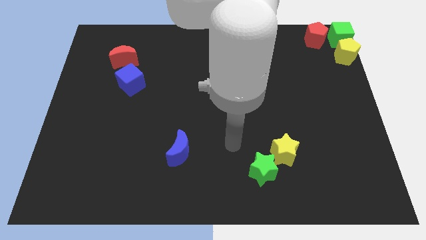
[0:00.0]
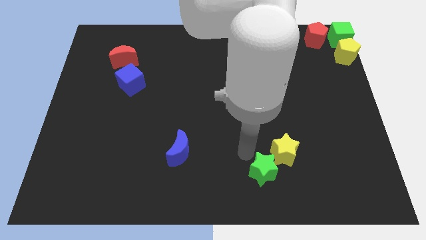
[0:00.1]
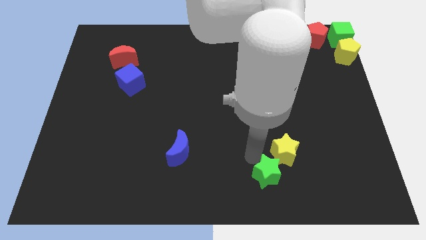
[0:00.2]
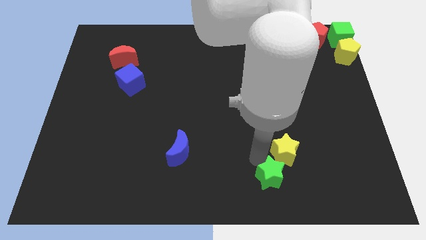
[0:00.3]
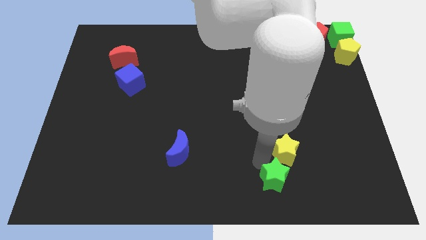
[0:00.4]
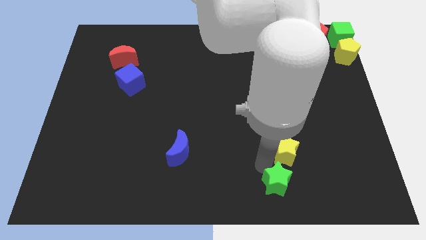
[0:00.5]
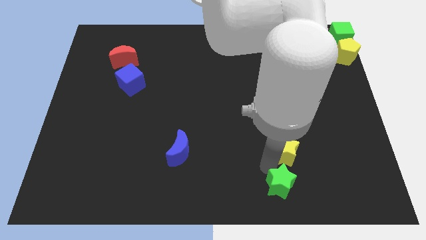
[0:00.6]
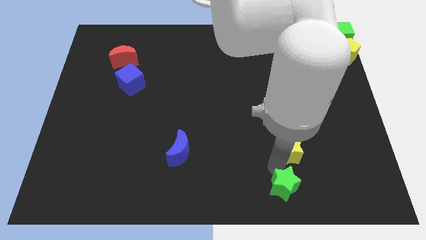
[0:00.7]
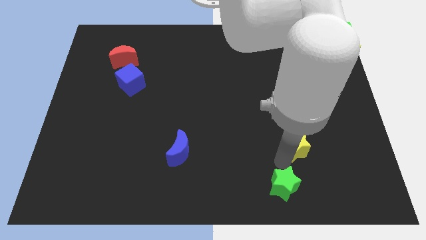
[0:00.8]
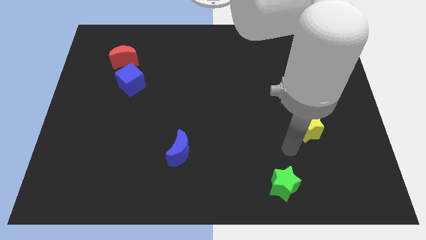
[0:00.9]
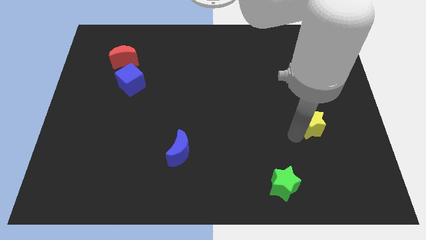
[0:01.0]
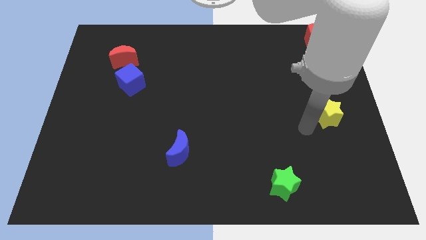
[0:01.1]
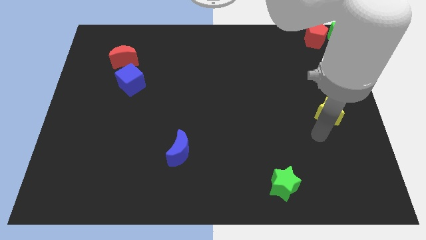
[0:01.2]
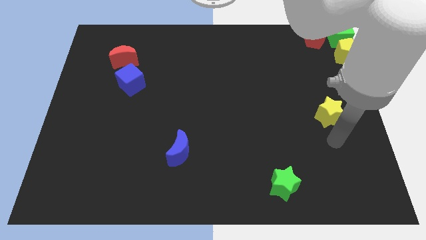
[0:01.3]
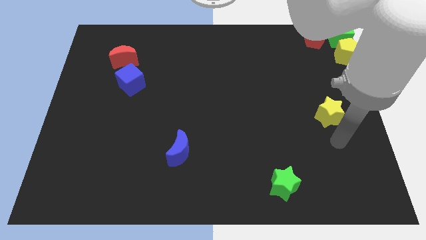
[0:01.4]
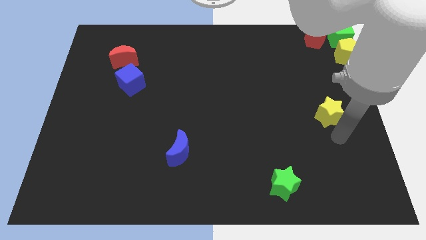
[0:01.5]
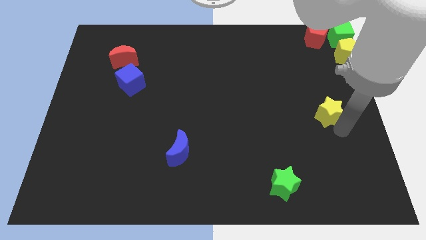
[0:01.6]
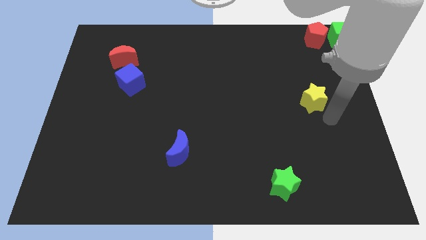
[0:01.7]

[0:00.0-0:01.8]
separate the yellow star from the green star

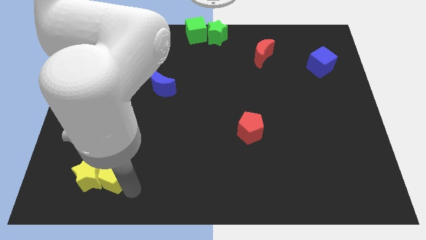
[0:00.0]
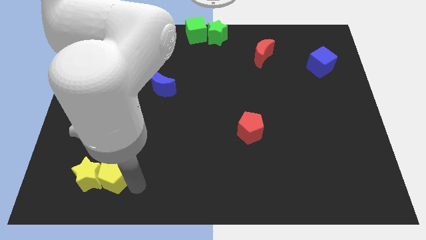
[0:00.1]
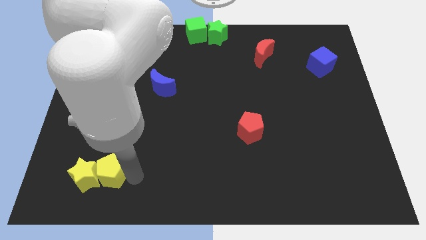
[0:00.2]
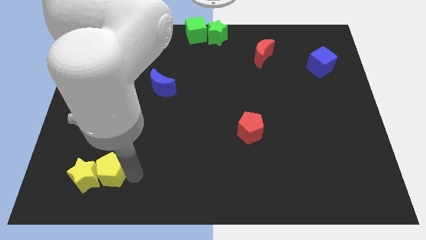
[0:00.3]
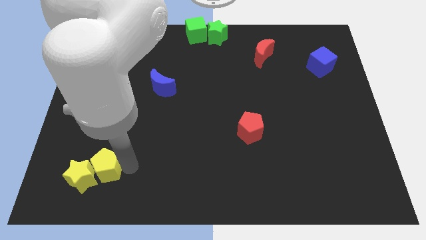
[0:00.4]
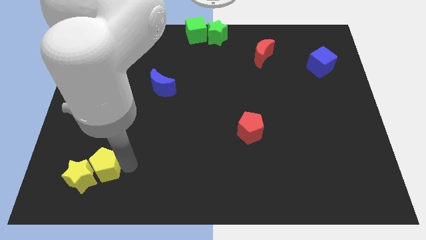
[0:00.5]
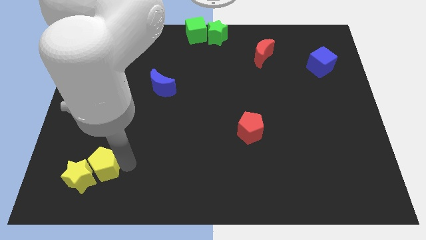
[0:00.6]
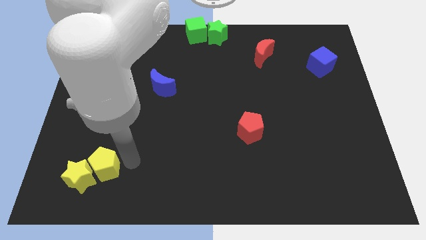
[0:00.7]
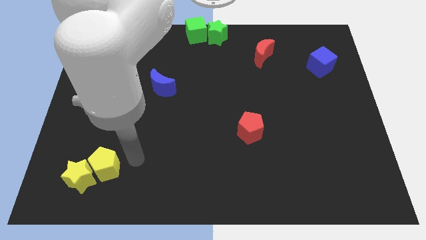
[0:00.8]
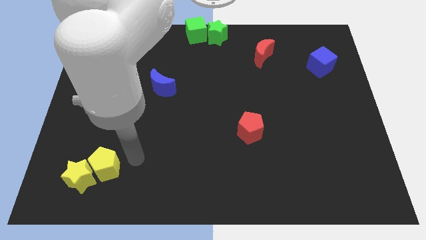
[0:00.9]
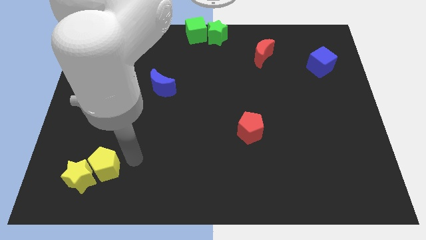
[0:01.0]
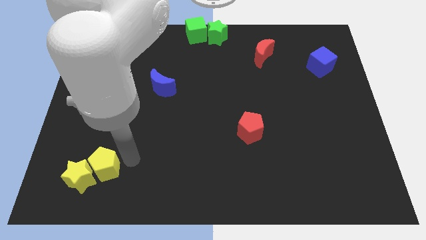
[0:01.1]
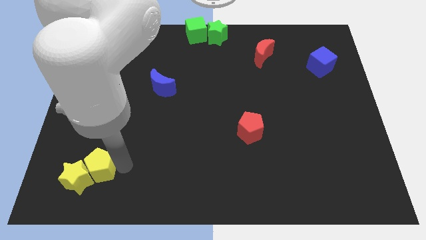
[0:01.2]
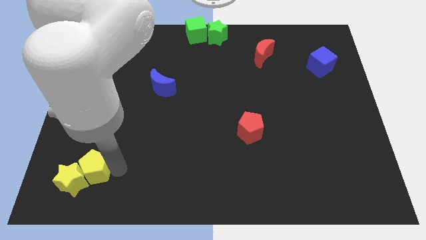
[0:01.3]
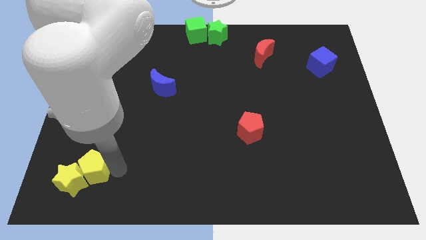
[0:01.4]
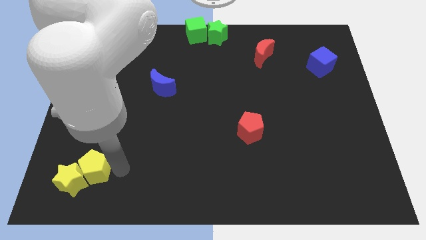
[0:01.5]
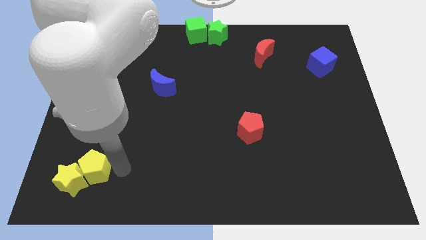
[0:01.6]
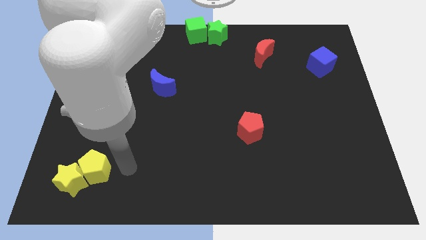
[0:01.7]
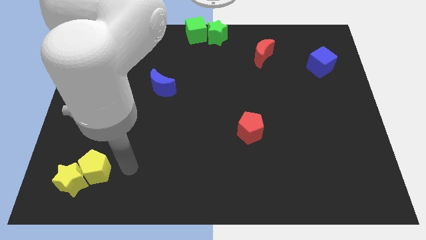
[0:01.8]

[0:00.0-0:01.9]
push the yellow star with the yellow pentagon towards the bottom left of the board

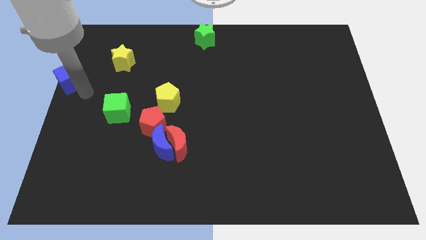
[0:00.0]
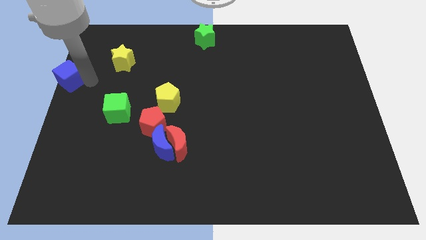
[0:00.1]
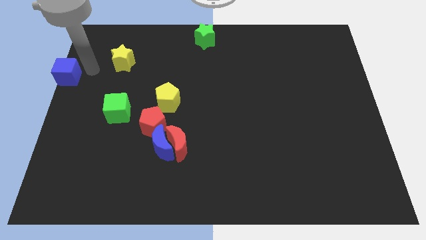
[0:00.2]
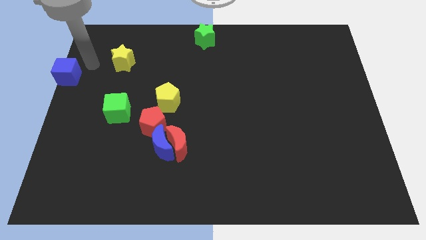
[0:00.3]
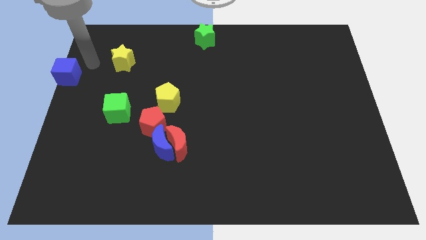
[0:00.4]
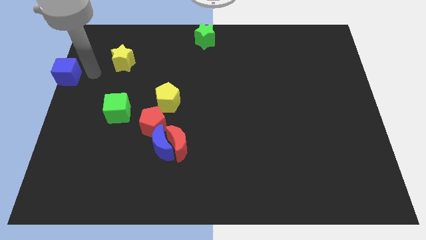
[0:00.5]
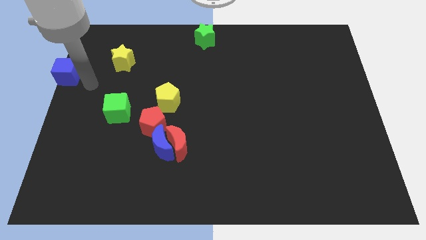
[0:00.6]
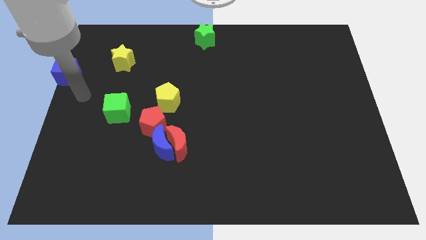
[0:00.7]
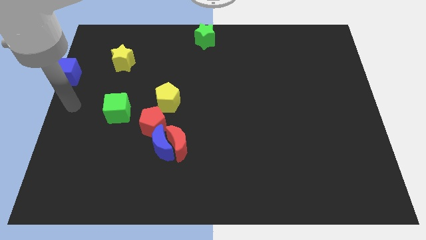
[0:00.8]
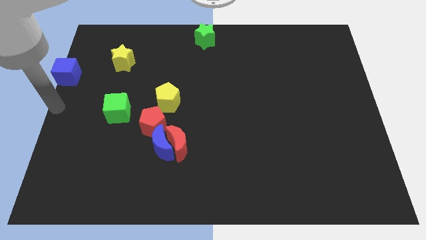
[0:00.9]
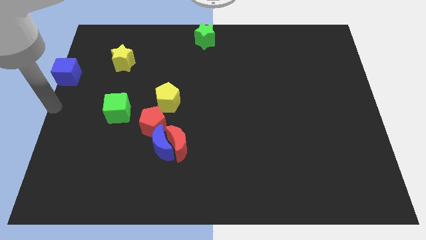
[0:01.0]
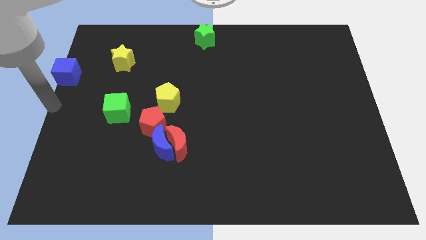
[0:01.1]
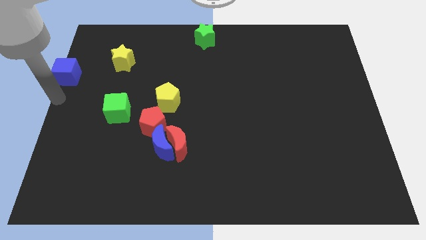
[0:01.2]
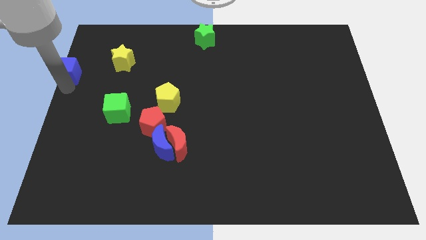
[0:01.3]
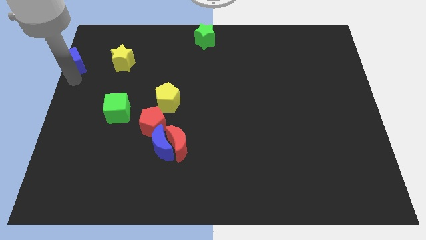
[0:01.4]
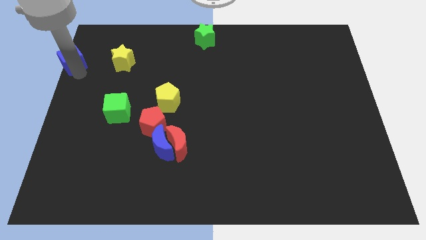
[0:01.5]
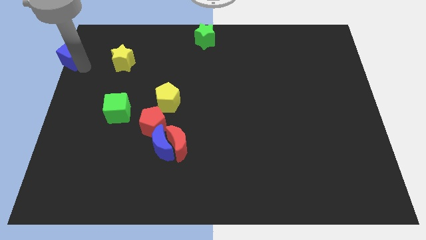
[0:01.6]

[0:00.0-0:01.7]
push the blue cube to the left of the yellow star

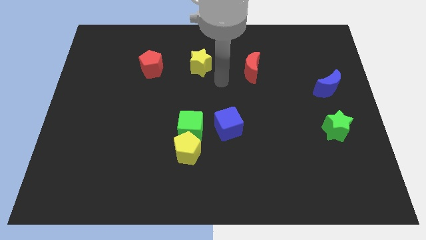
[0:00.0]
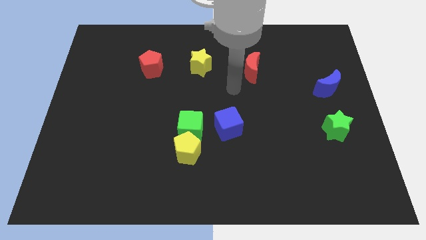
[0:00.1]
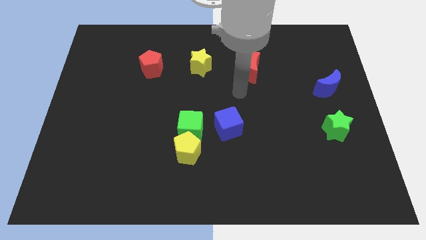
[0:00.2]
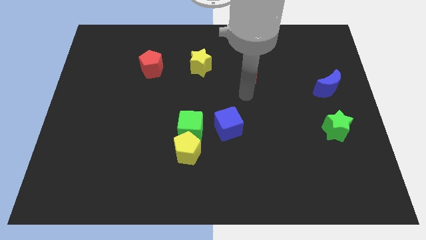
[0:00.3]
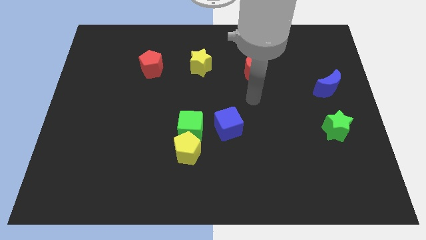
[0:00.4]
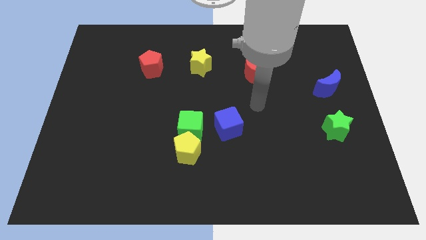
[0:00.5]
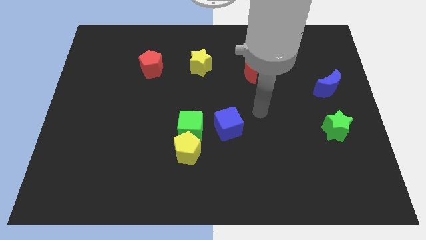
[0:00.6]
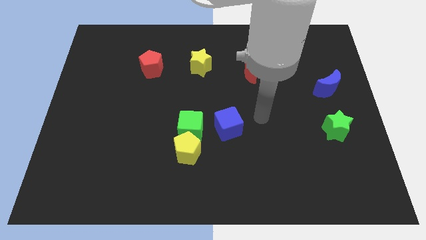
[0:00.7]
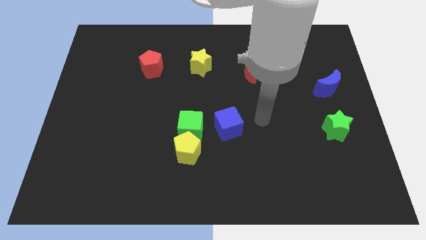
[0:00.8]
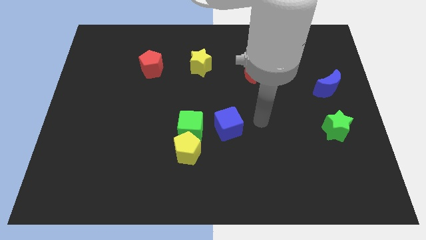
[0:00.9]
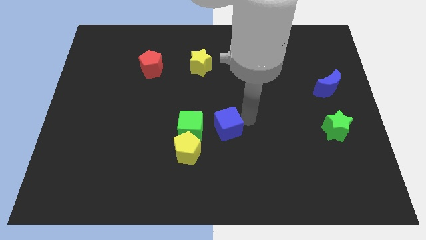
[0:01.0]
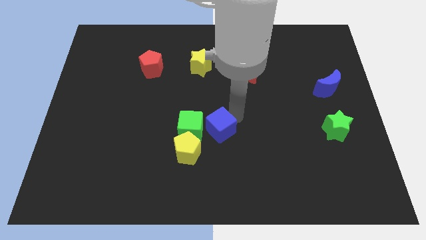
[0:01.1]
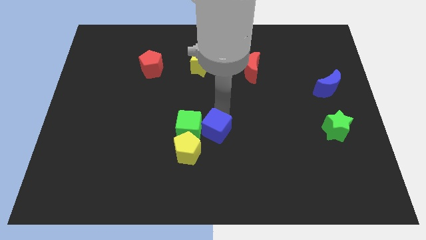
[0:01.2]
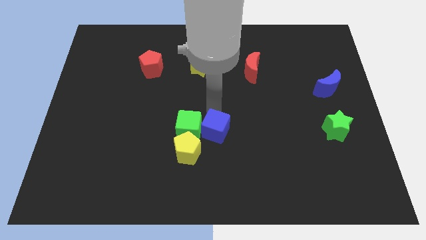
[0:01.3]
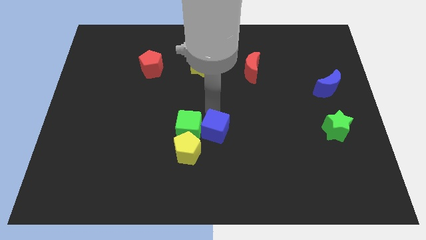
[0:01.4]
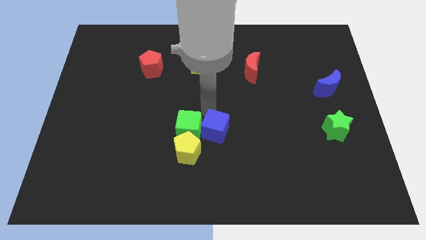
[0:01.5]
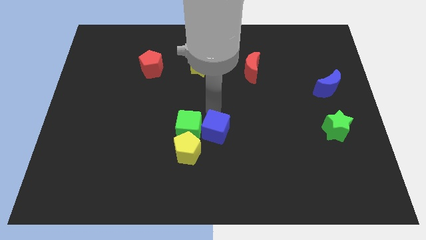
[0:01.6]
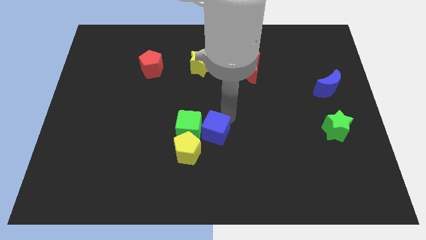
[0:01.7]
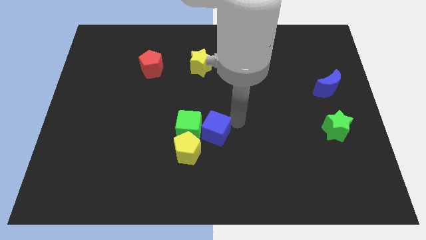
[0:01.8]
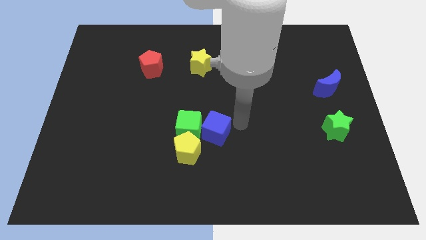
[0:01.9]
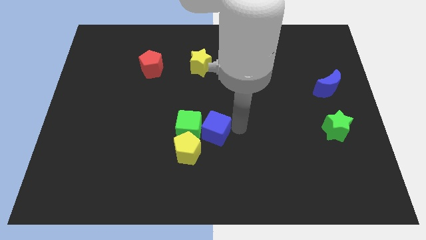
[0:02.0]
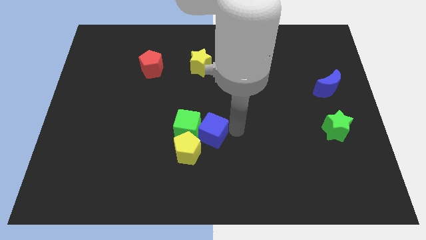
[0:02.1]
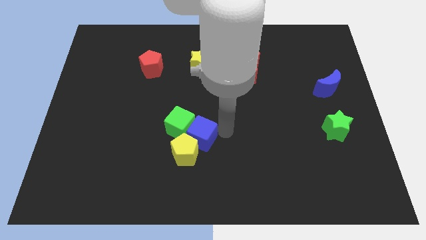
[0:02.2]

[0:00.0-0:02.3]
move the blue cube into the green cube

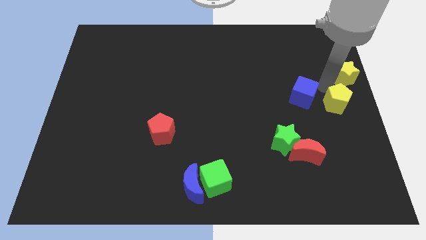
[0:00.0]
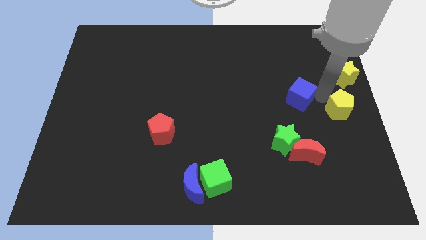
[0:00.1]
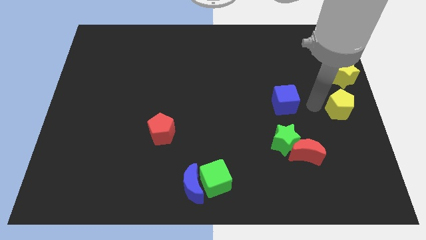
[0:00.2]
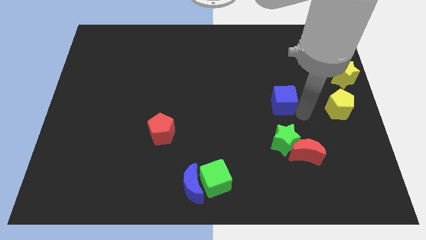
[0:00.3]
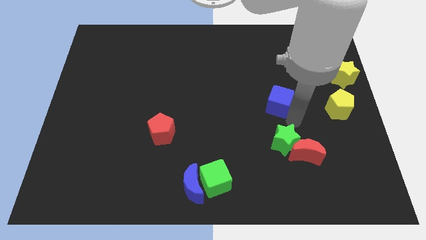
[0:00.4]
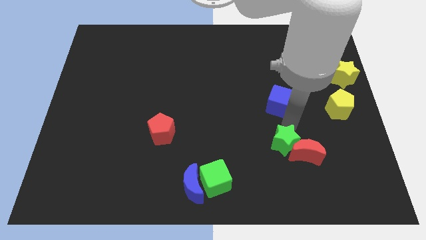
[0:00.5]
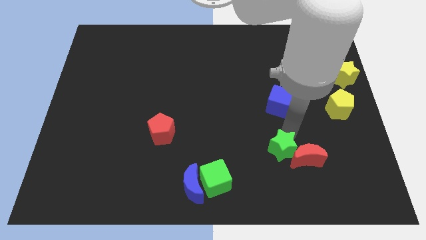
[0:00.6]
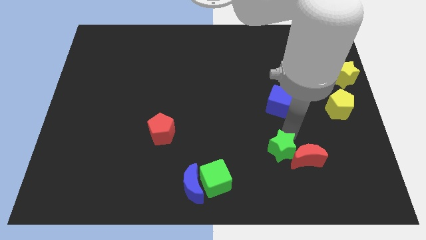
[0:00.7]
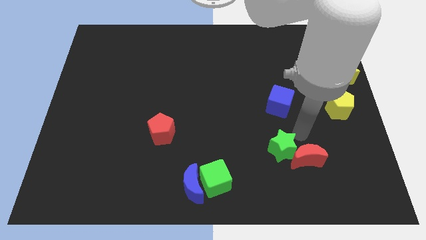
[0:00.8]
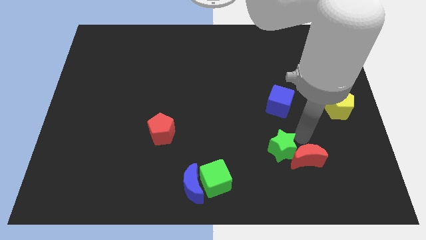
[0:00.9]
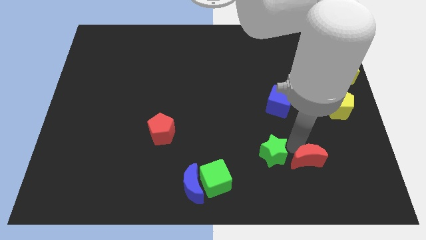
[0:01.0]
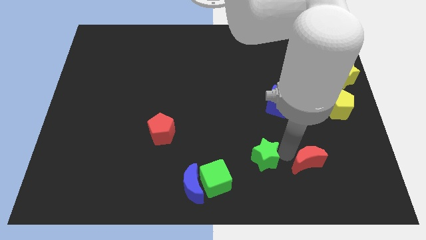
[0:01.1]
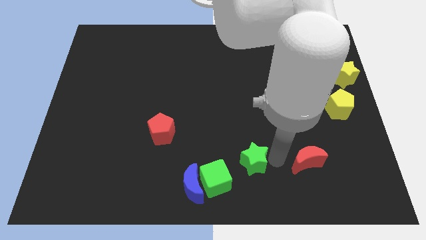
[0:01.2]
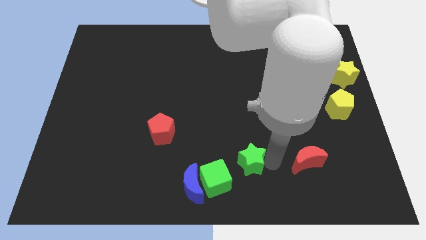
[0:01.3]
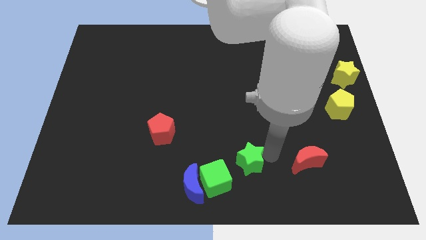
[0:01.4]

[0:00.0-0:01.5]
push the green star to the bottom left
